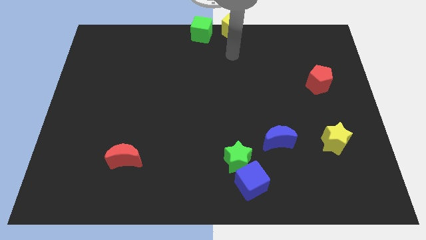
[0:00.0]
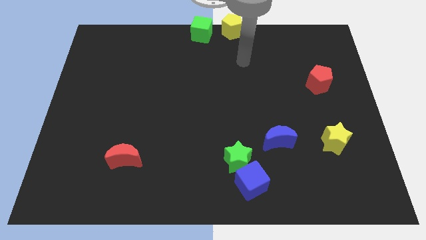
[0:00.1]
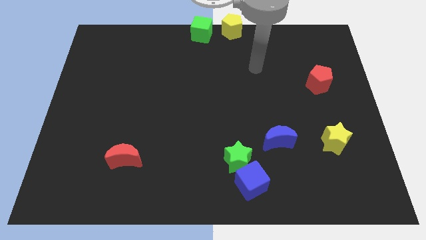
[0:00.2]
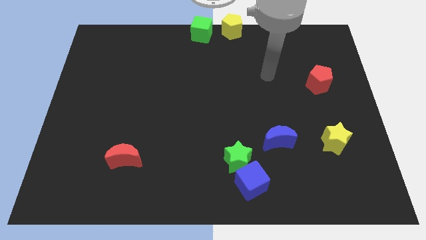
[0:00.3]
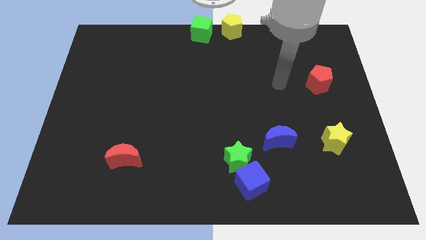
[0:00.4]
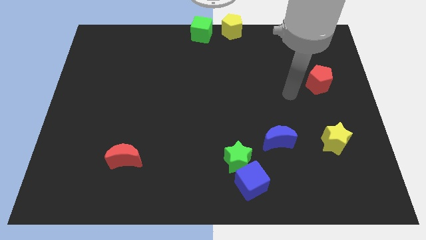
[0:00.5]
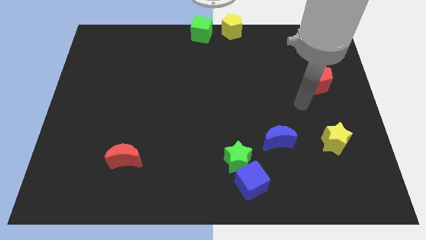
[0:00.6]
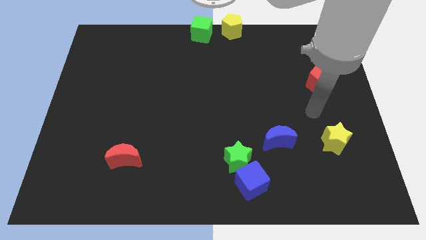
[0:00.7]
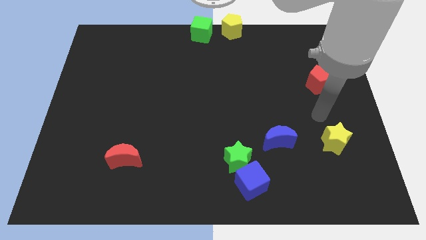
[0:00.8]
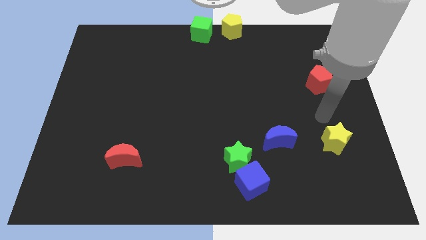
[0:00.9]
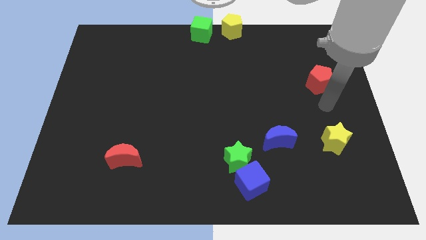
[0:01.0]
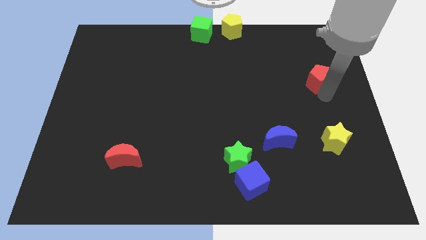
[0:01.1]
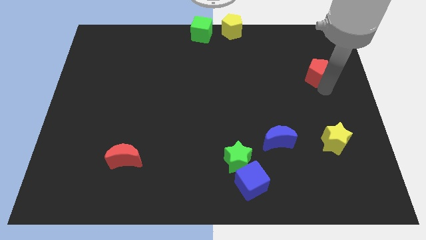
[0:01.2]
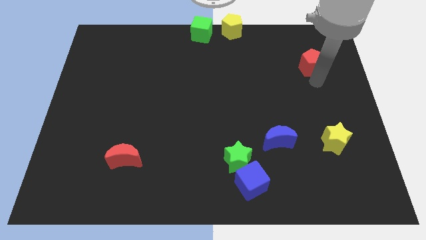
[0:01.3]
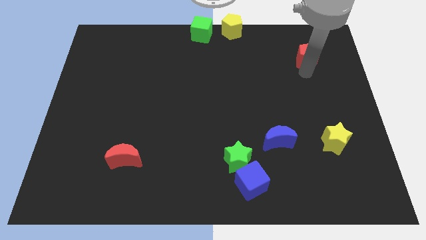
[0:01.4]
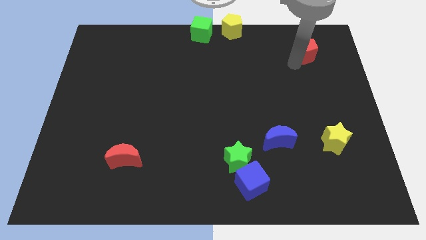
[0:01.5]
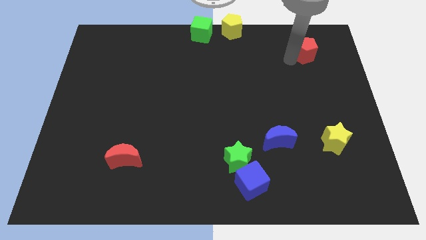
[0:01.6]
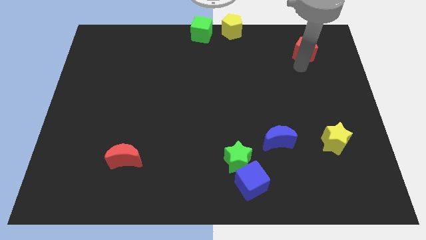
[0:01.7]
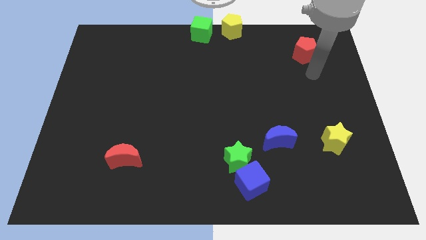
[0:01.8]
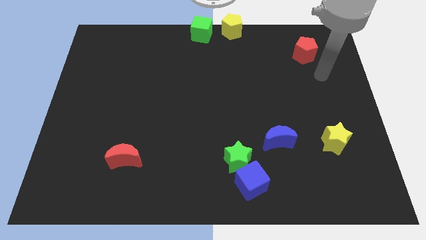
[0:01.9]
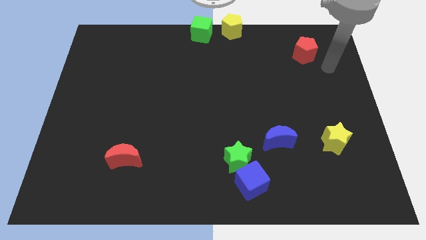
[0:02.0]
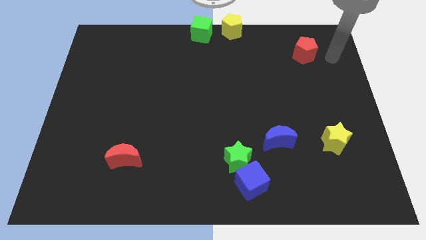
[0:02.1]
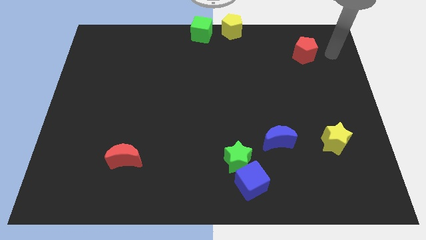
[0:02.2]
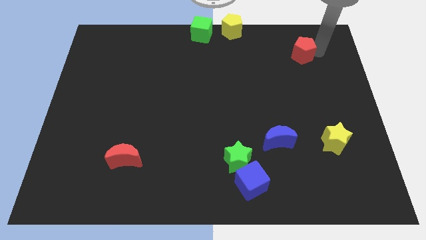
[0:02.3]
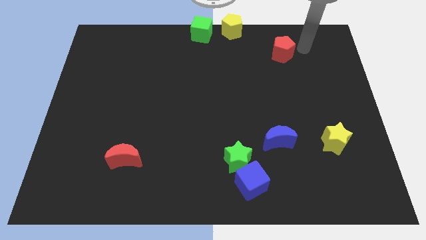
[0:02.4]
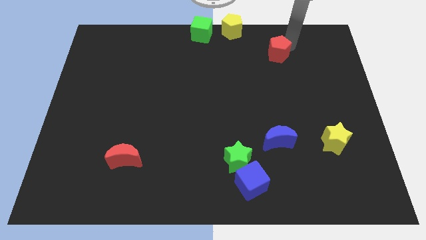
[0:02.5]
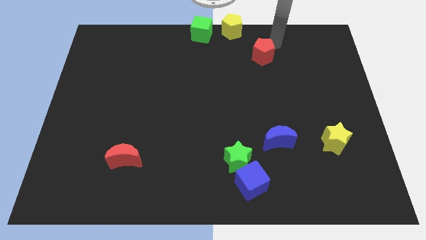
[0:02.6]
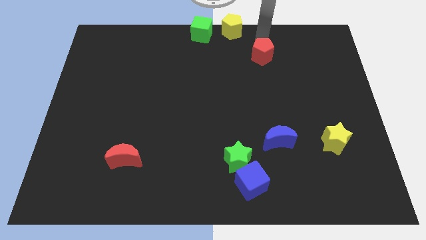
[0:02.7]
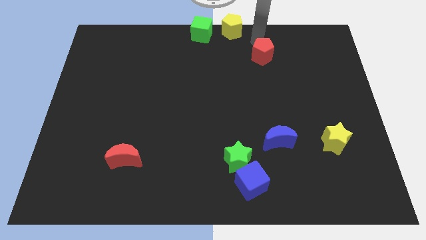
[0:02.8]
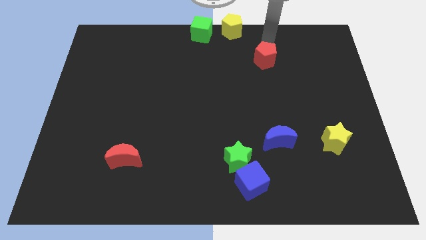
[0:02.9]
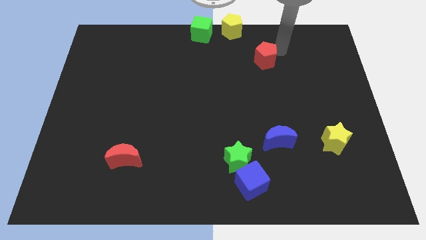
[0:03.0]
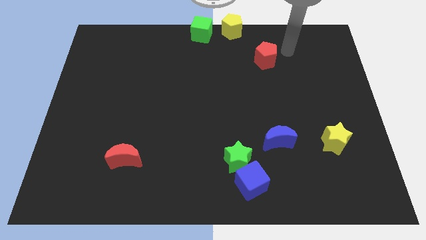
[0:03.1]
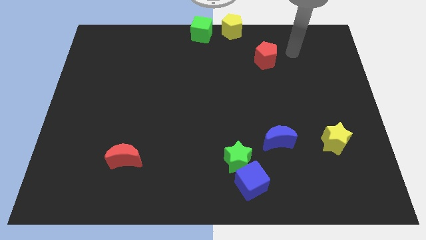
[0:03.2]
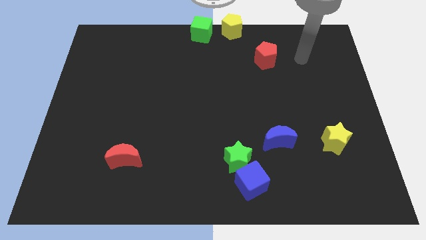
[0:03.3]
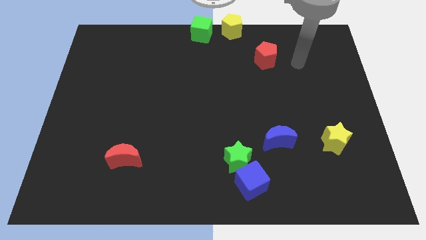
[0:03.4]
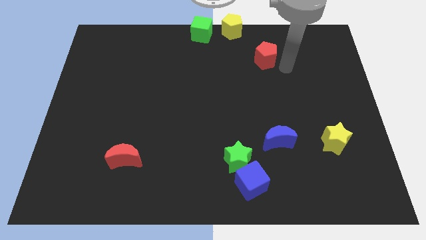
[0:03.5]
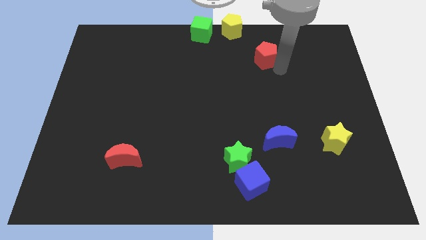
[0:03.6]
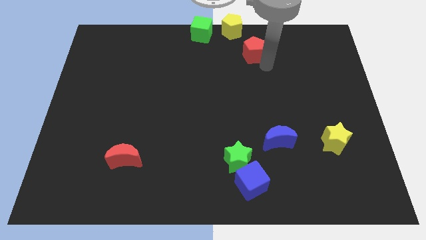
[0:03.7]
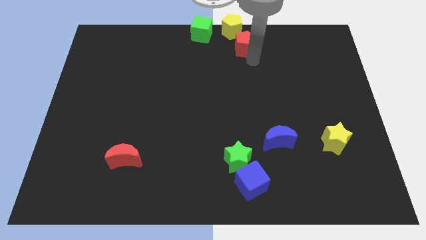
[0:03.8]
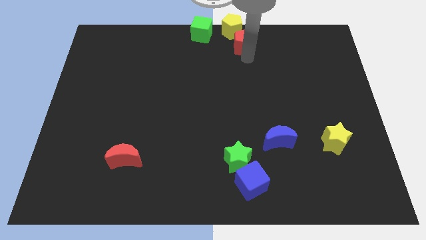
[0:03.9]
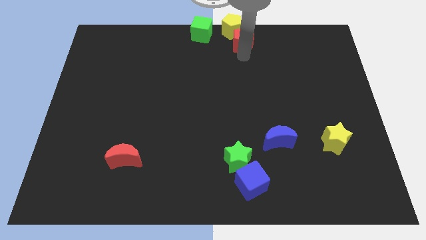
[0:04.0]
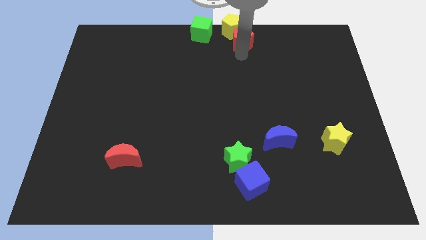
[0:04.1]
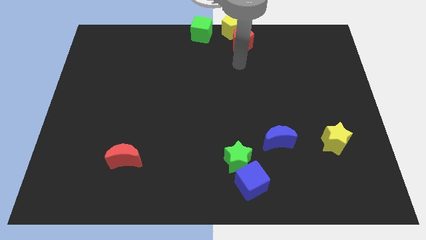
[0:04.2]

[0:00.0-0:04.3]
move the red pentagon to the bottom right side of the yellow pentagon

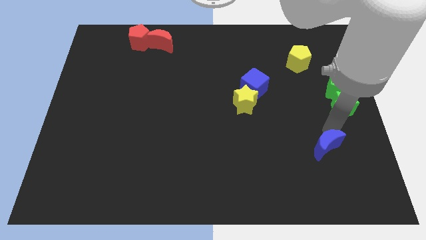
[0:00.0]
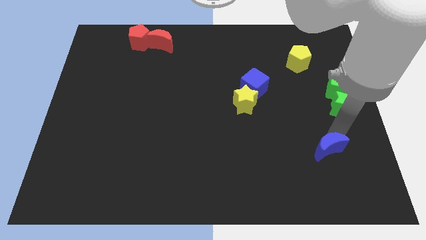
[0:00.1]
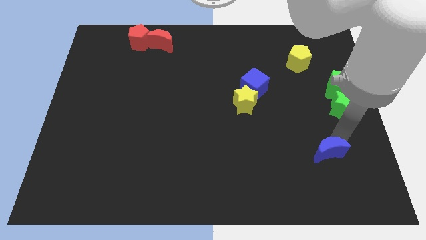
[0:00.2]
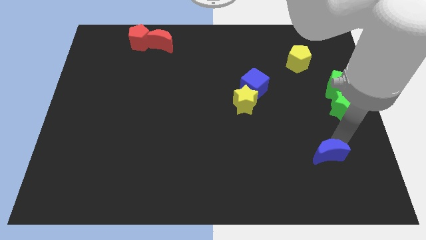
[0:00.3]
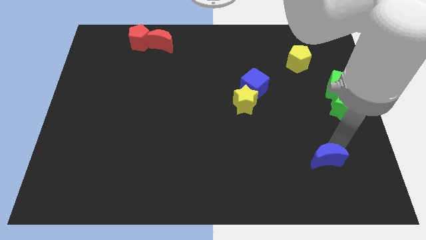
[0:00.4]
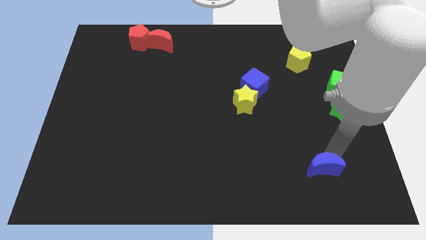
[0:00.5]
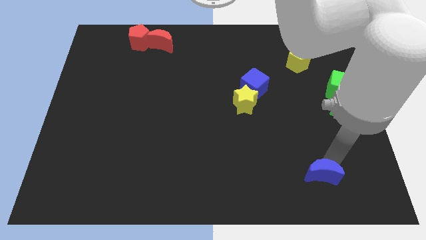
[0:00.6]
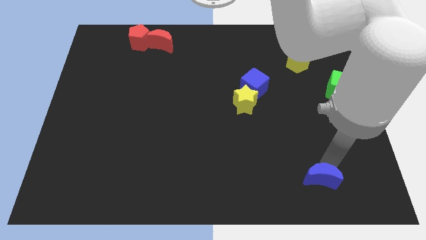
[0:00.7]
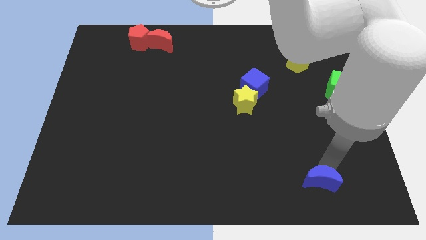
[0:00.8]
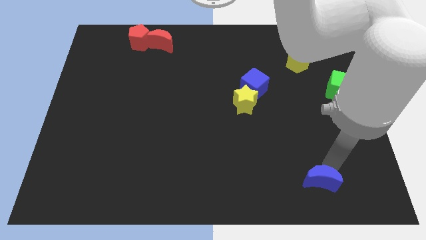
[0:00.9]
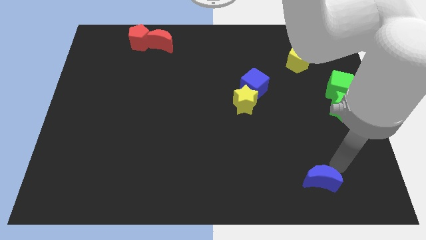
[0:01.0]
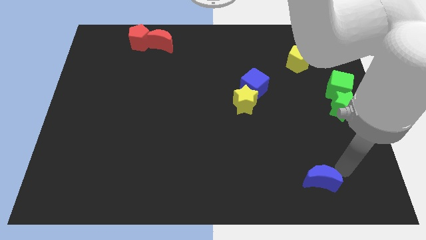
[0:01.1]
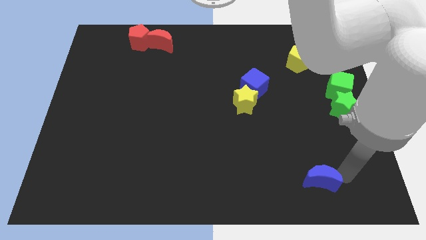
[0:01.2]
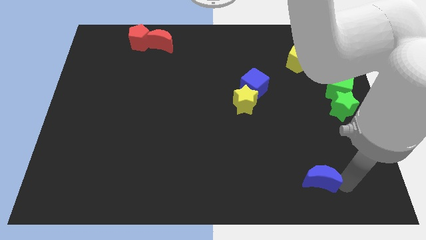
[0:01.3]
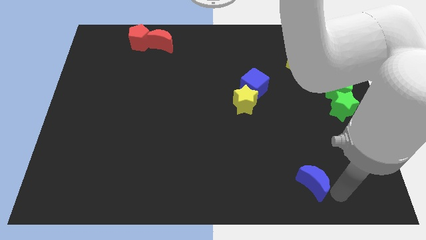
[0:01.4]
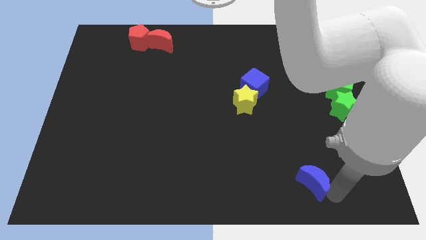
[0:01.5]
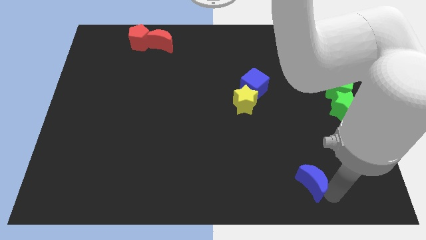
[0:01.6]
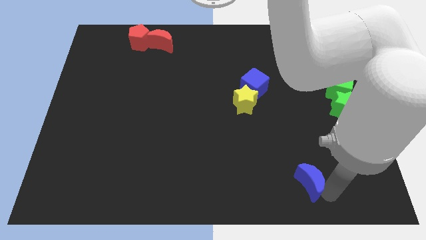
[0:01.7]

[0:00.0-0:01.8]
move the blue crescent vertically below to the yellow pentagon

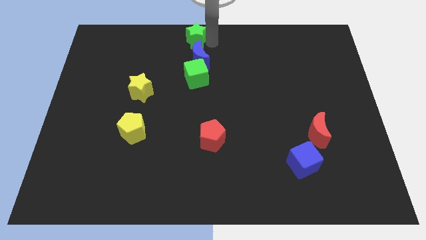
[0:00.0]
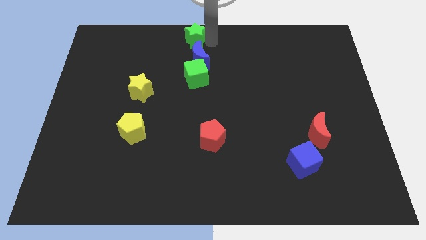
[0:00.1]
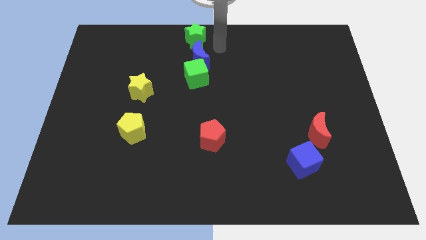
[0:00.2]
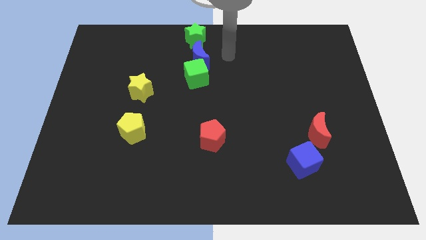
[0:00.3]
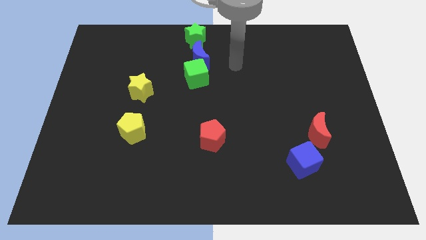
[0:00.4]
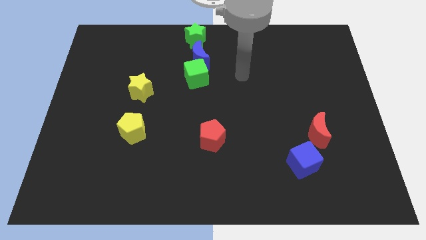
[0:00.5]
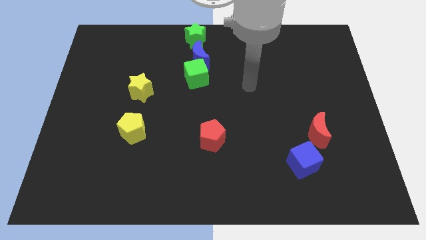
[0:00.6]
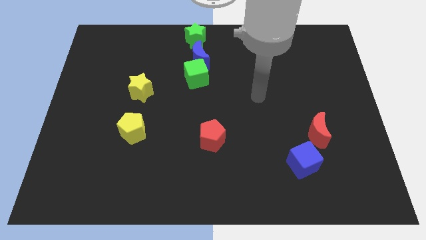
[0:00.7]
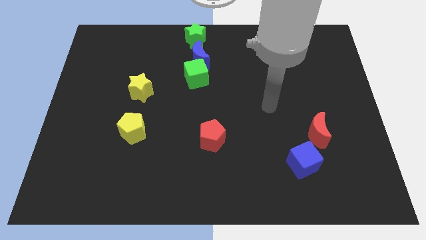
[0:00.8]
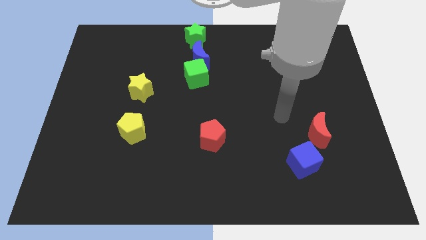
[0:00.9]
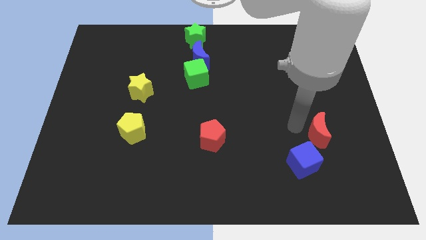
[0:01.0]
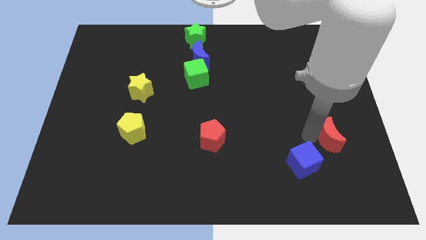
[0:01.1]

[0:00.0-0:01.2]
move arm towards red crescent

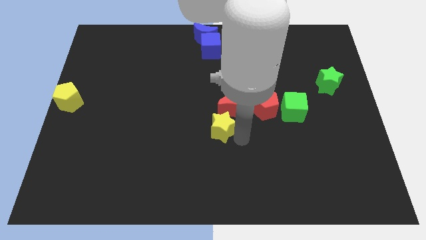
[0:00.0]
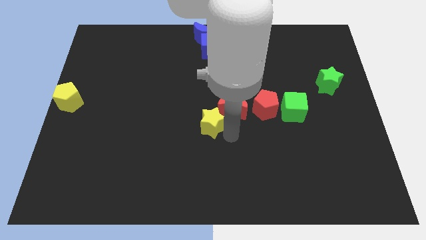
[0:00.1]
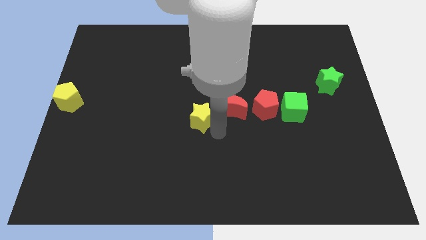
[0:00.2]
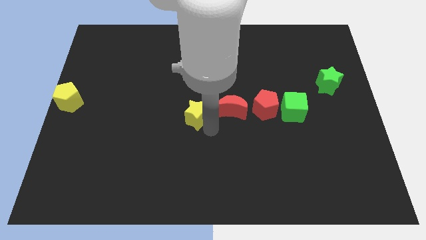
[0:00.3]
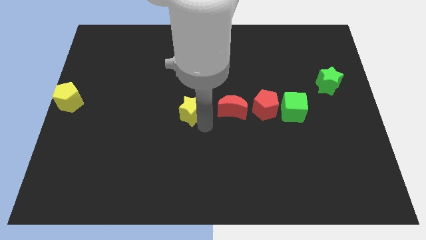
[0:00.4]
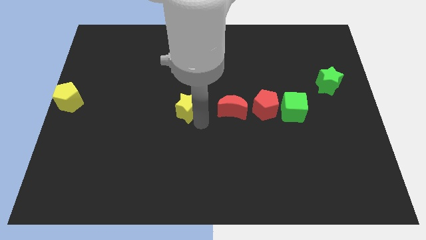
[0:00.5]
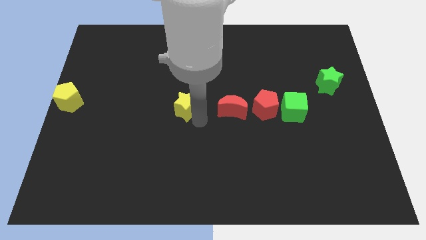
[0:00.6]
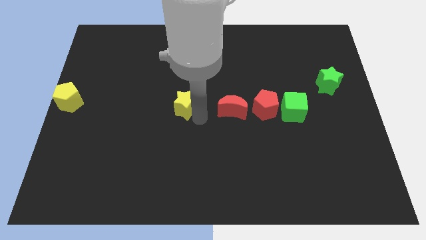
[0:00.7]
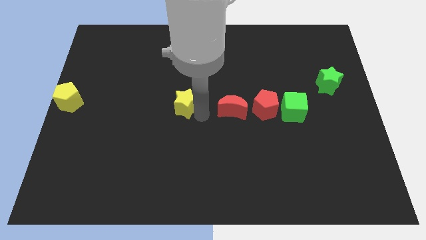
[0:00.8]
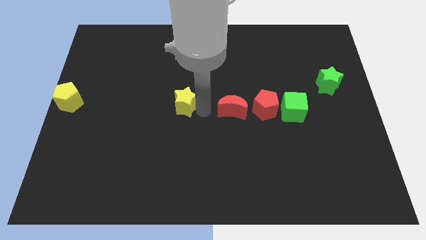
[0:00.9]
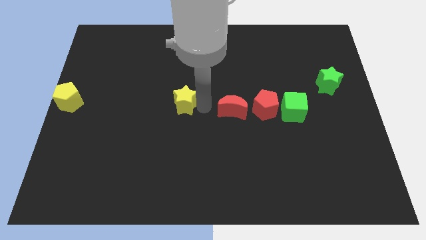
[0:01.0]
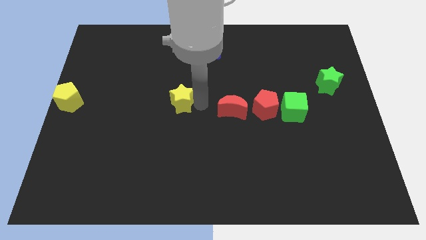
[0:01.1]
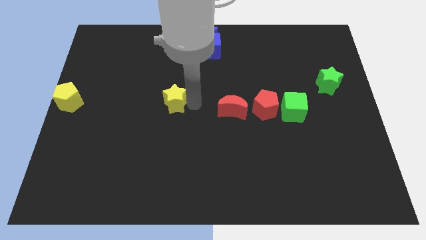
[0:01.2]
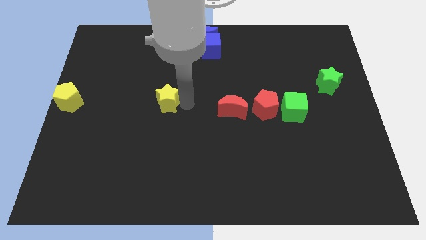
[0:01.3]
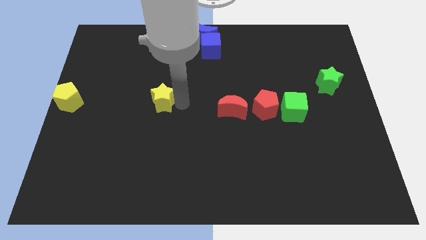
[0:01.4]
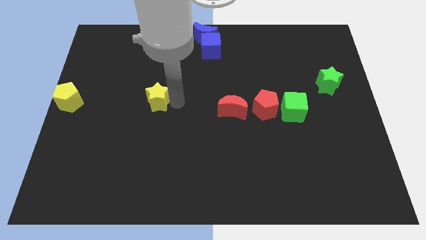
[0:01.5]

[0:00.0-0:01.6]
place the yellow star horizontally to the right side of the yellow pentagon

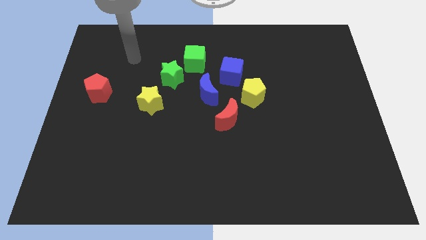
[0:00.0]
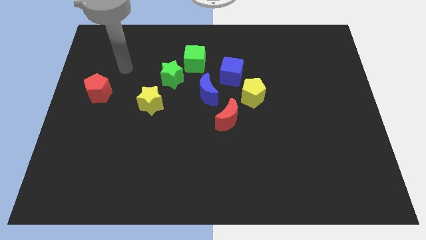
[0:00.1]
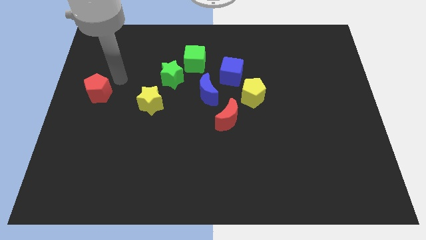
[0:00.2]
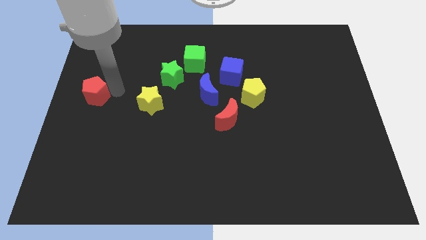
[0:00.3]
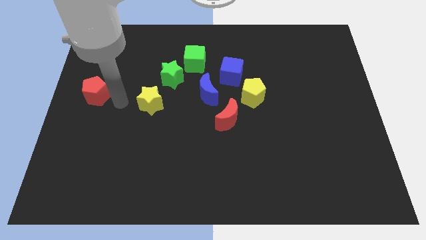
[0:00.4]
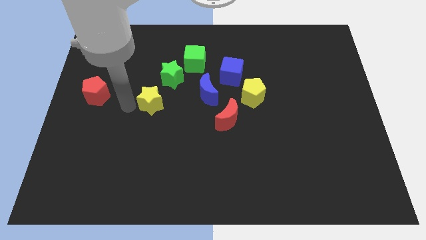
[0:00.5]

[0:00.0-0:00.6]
slightly touch right to the red pentagon
